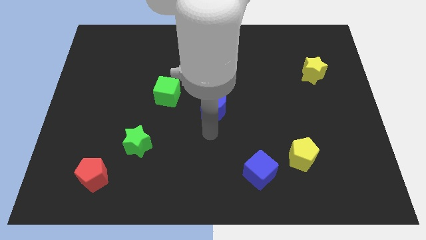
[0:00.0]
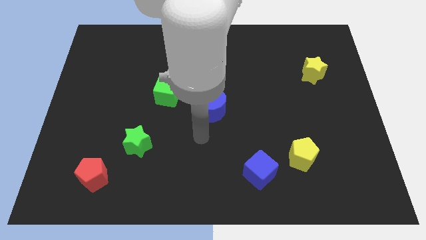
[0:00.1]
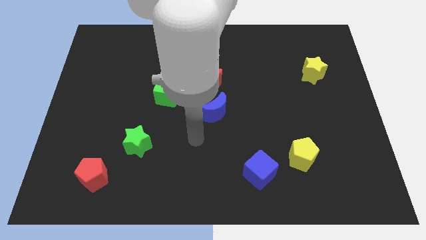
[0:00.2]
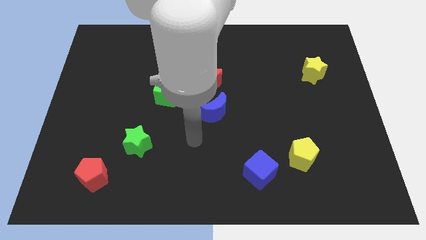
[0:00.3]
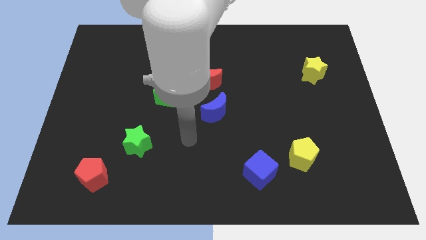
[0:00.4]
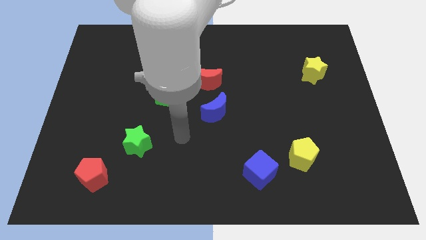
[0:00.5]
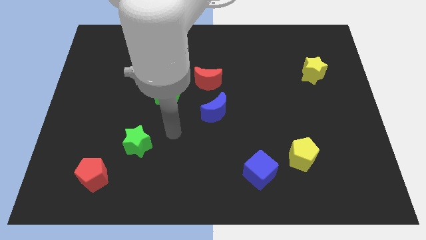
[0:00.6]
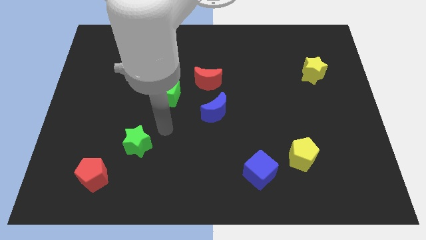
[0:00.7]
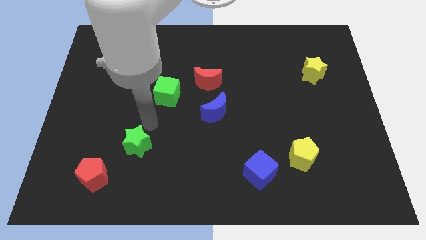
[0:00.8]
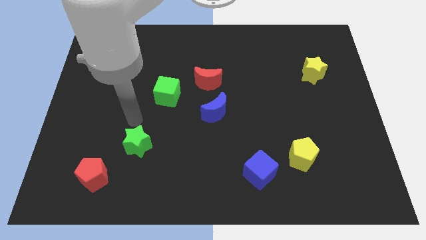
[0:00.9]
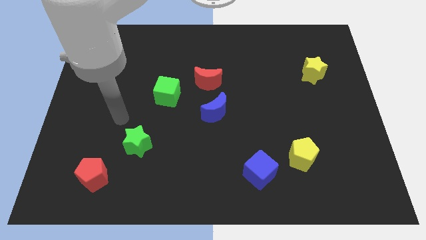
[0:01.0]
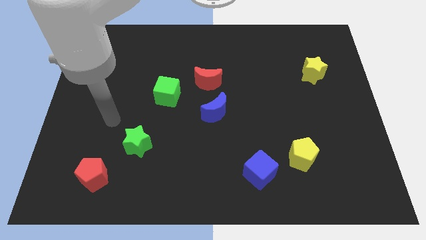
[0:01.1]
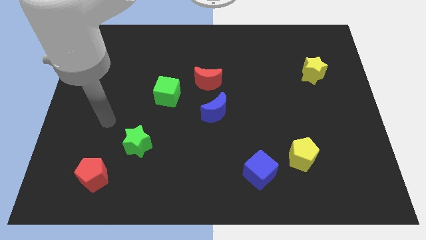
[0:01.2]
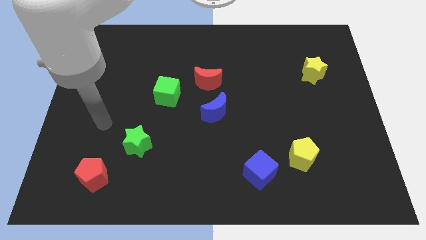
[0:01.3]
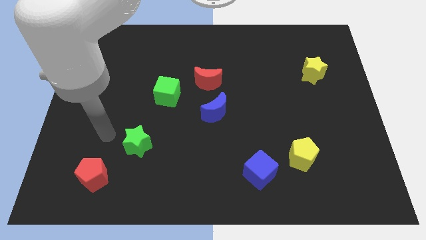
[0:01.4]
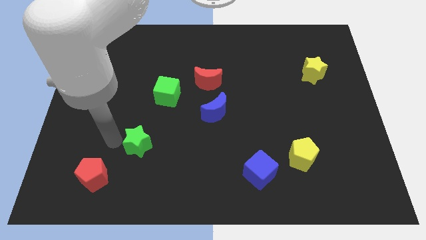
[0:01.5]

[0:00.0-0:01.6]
move your arm to the left of green star

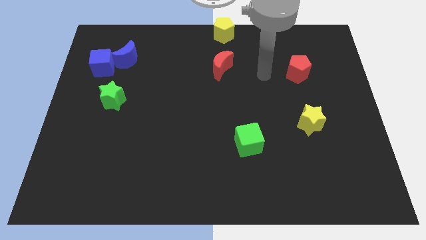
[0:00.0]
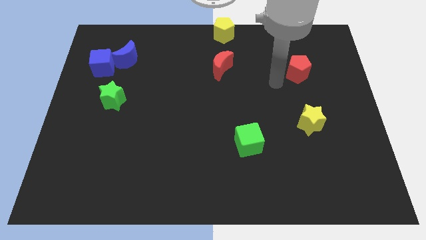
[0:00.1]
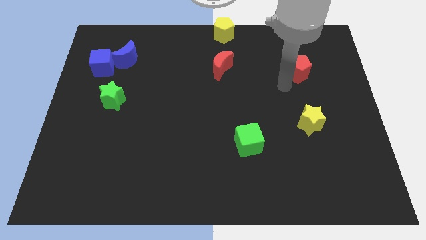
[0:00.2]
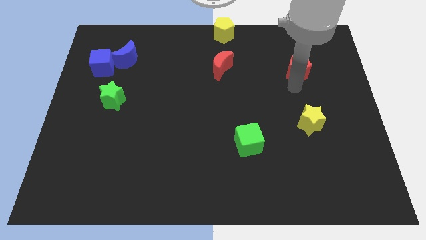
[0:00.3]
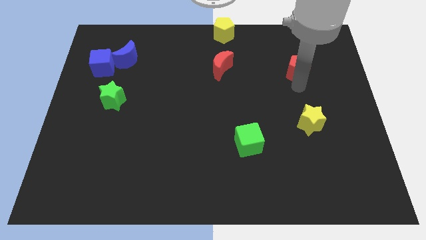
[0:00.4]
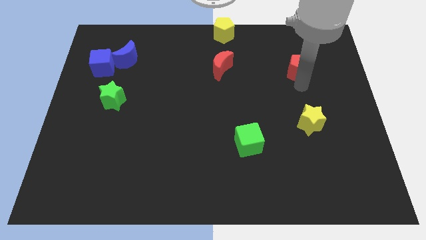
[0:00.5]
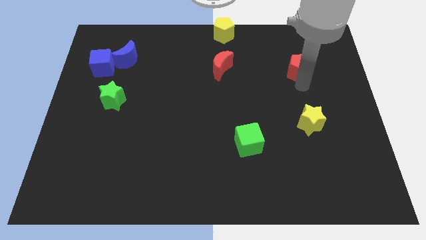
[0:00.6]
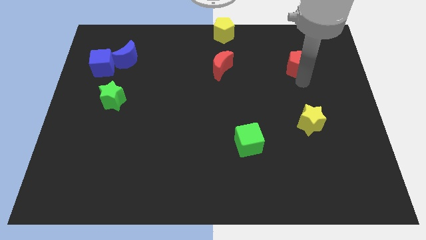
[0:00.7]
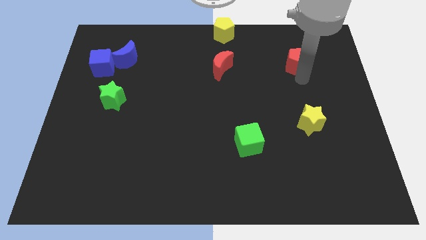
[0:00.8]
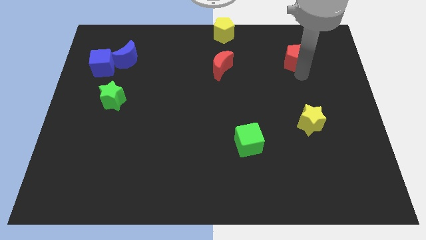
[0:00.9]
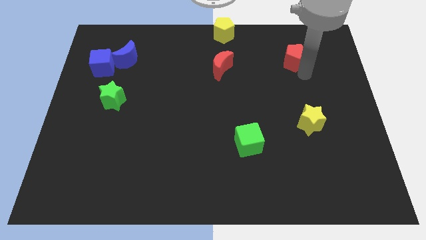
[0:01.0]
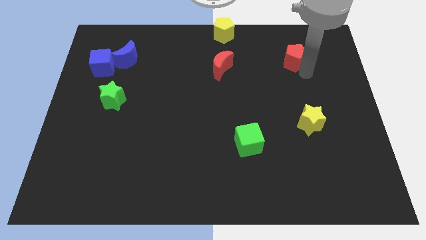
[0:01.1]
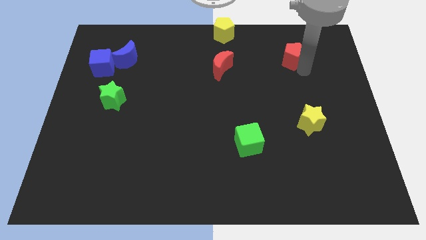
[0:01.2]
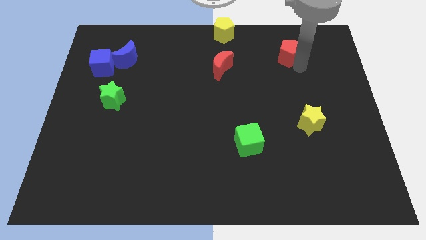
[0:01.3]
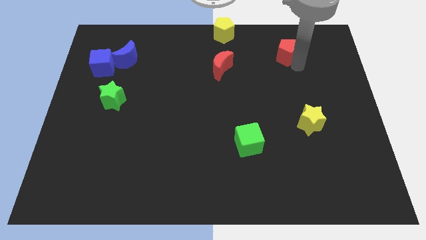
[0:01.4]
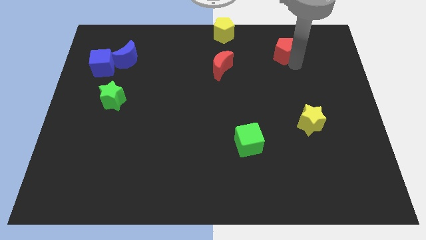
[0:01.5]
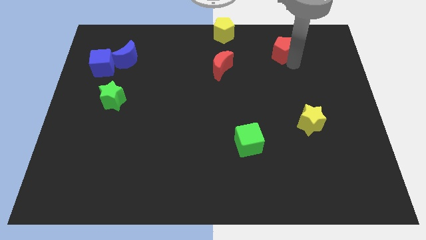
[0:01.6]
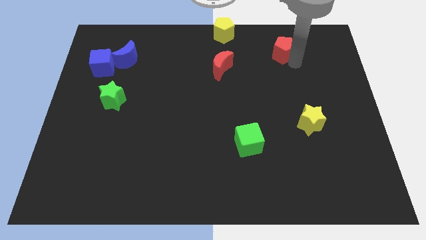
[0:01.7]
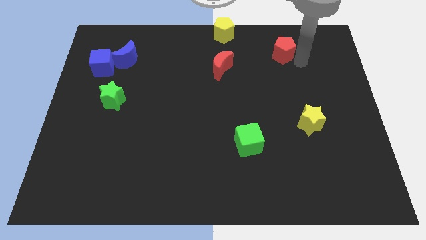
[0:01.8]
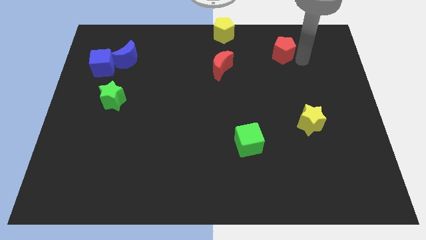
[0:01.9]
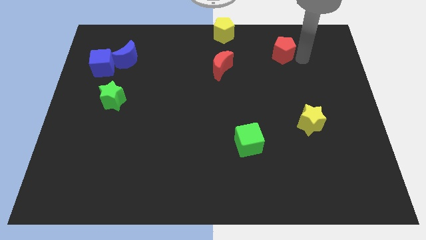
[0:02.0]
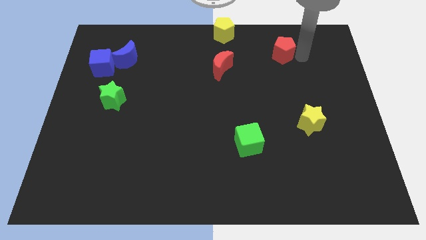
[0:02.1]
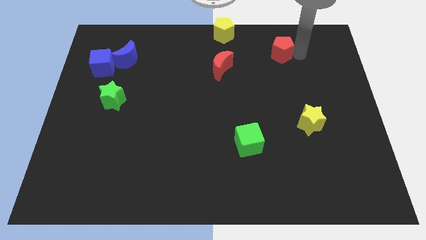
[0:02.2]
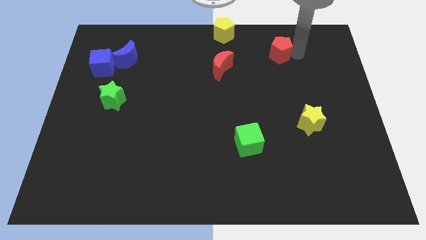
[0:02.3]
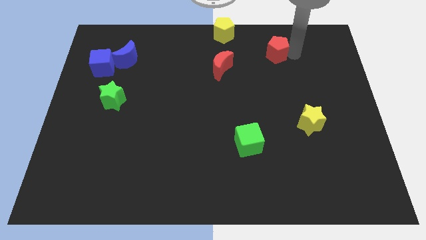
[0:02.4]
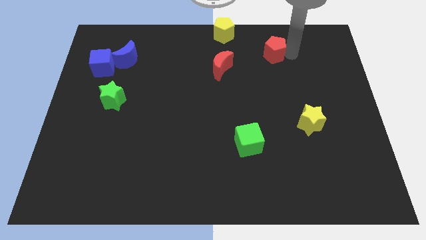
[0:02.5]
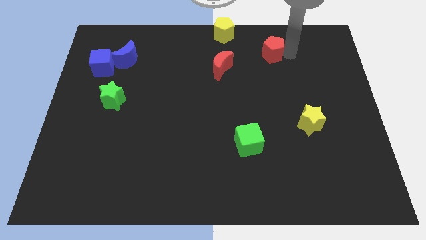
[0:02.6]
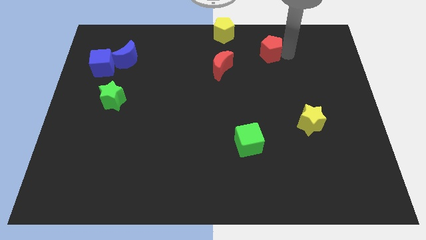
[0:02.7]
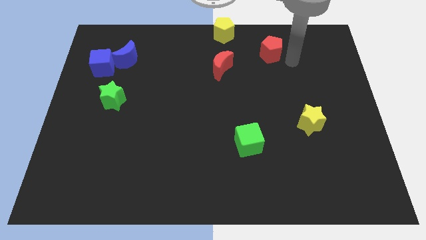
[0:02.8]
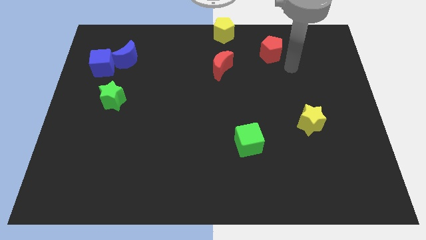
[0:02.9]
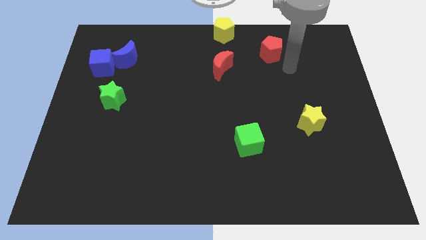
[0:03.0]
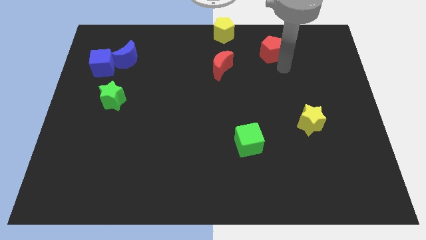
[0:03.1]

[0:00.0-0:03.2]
push red pentagon slightly upward

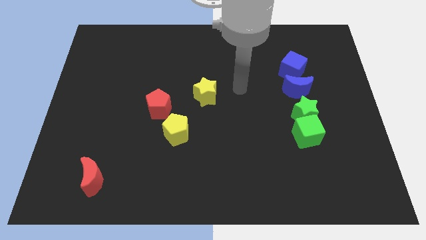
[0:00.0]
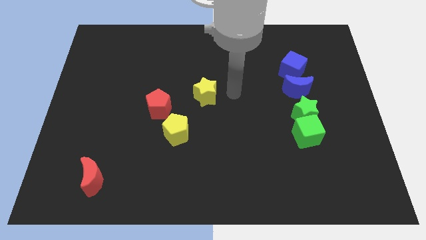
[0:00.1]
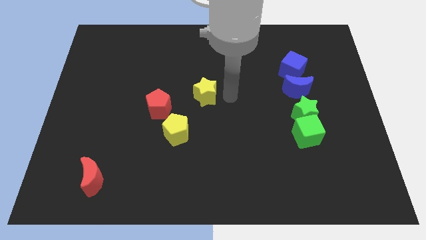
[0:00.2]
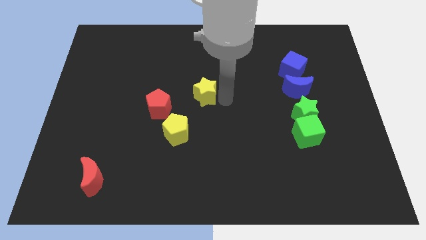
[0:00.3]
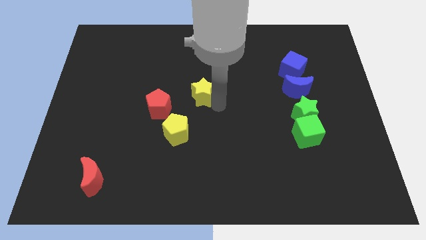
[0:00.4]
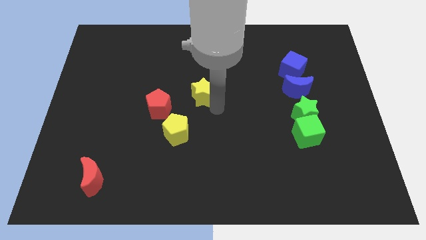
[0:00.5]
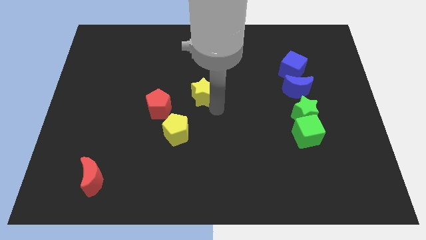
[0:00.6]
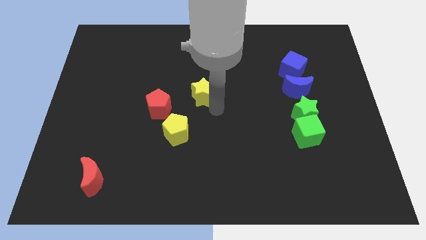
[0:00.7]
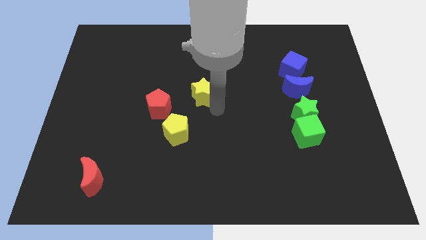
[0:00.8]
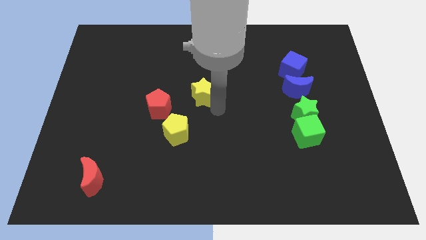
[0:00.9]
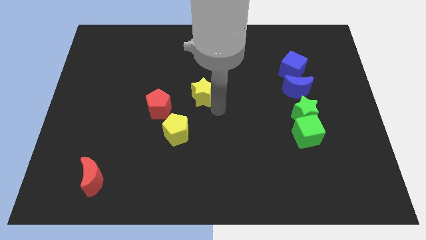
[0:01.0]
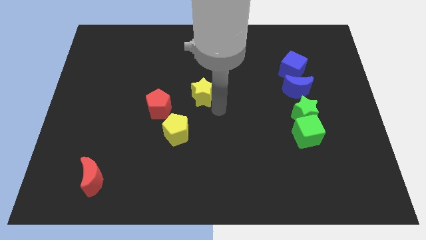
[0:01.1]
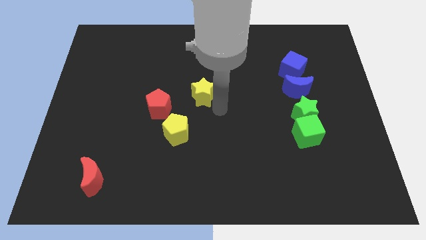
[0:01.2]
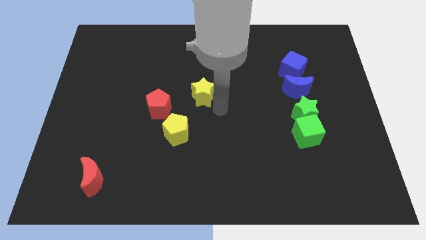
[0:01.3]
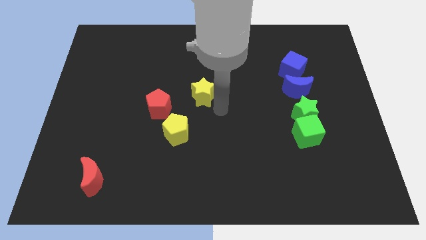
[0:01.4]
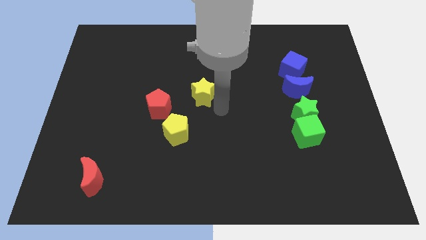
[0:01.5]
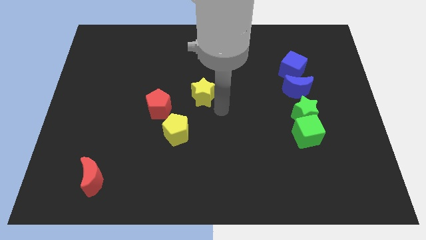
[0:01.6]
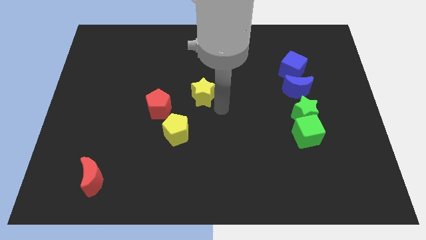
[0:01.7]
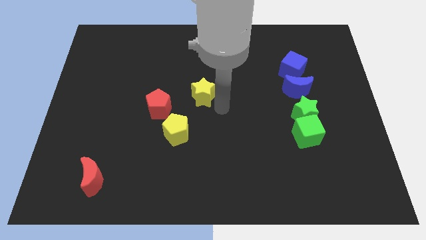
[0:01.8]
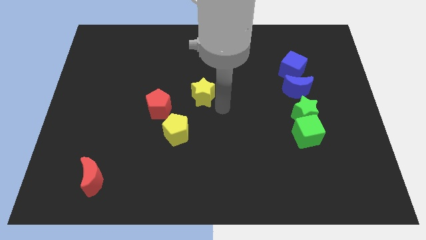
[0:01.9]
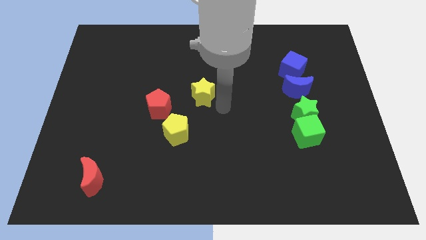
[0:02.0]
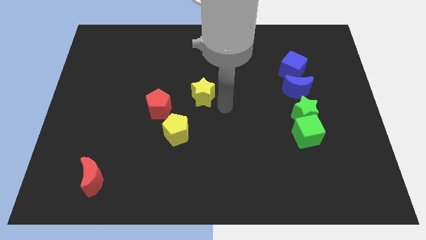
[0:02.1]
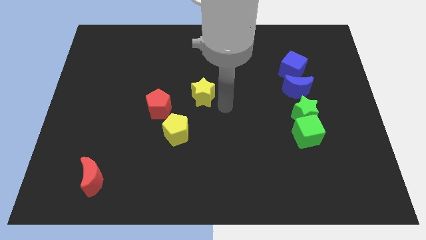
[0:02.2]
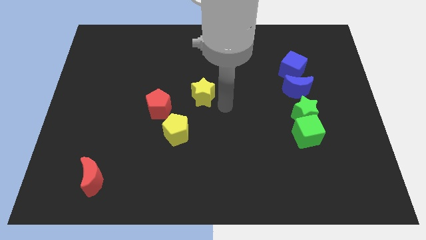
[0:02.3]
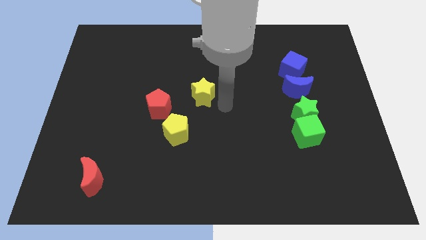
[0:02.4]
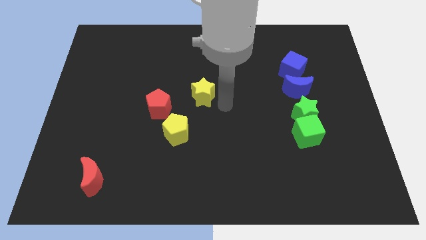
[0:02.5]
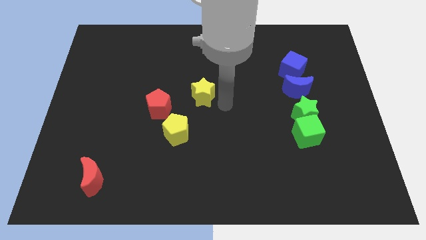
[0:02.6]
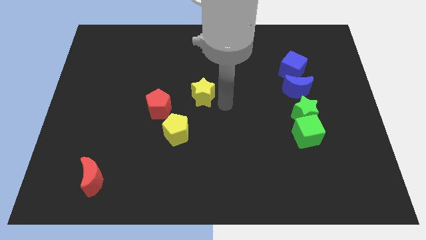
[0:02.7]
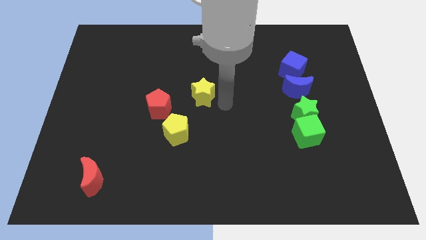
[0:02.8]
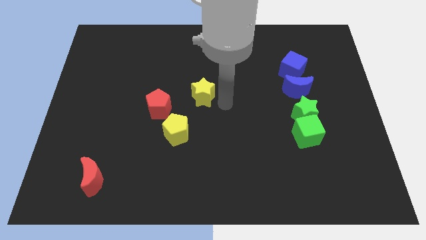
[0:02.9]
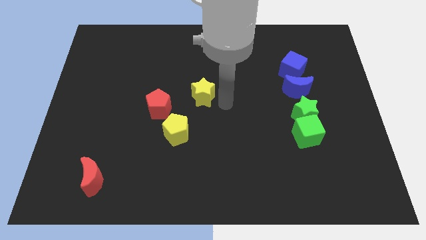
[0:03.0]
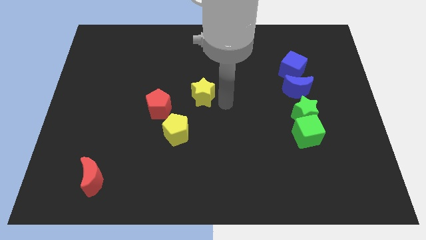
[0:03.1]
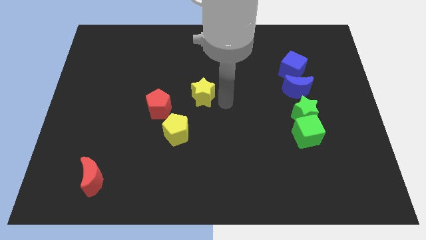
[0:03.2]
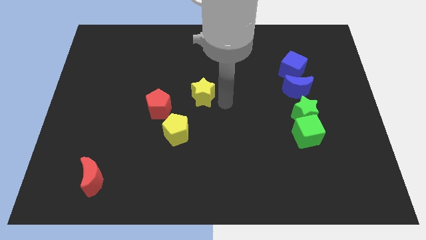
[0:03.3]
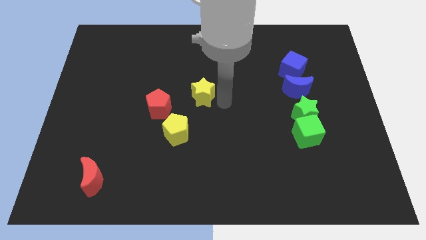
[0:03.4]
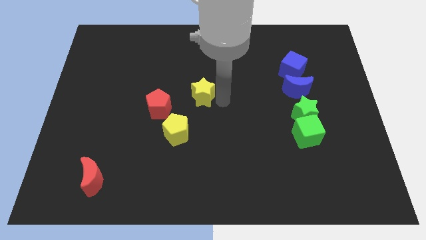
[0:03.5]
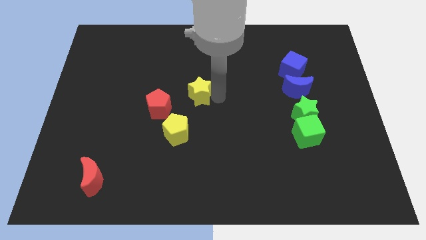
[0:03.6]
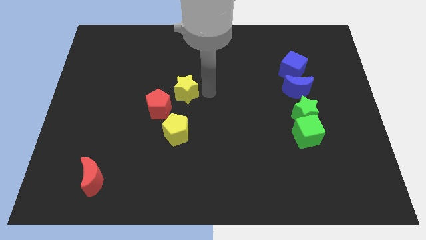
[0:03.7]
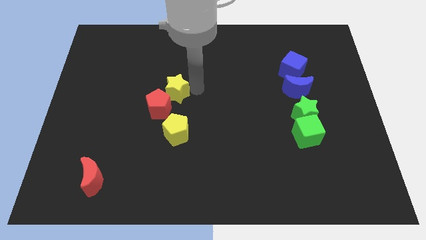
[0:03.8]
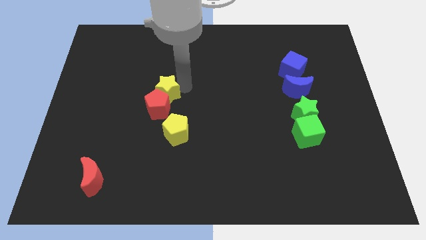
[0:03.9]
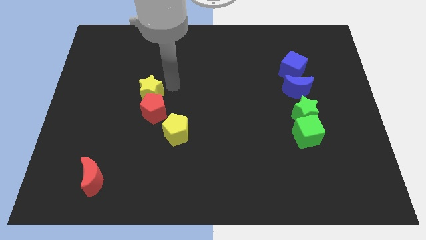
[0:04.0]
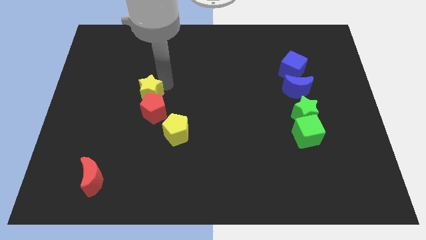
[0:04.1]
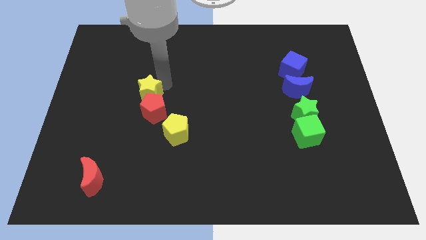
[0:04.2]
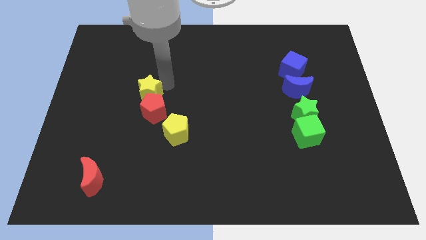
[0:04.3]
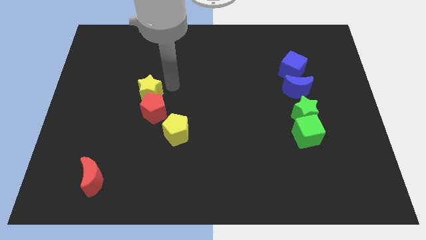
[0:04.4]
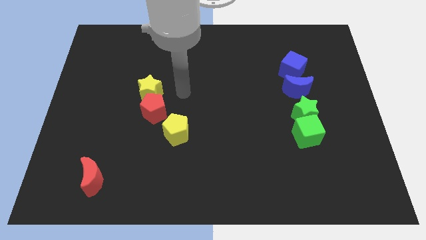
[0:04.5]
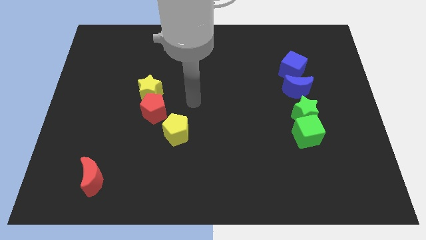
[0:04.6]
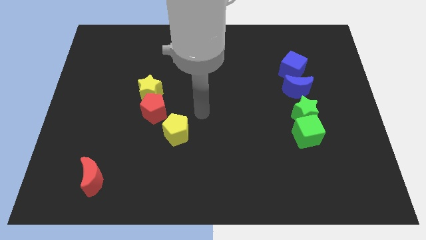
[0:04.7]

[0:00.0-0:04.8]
push the yellow star to the top side of the red pentagon
